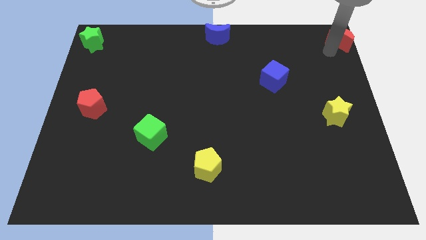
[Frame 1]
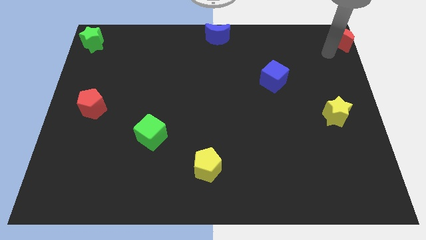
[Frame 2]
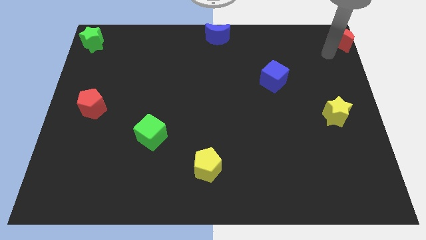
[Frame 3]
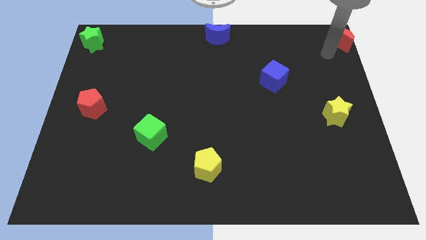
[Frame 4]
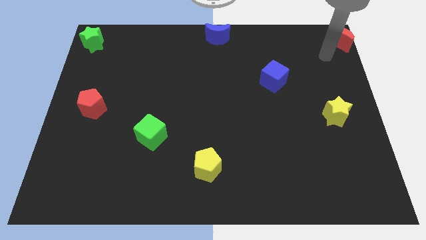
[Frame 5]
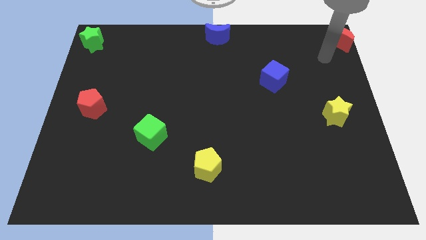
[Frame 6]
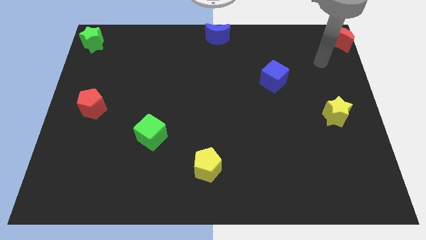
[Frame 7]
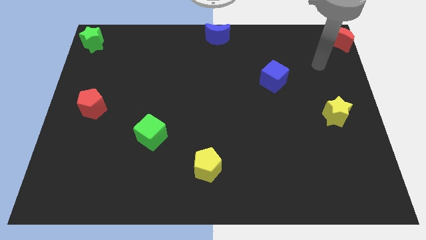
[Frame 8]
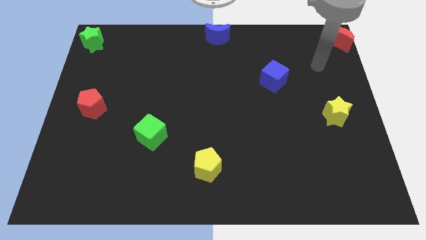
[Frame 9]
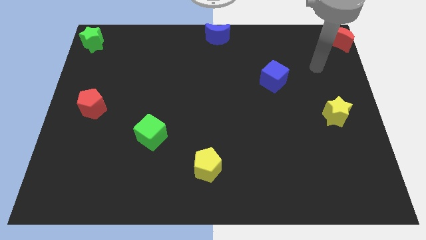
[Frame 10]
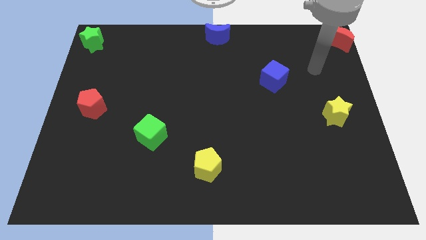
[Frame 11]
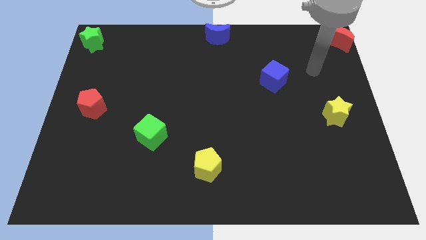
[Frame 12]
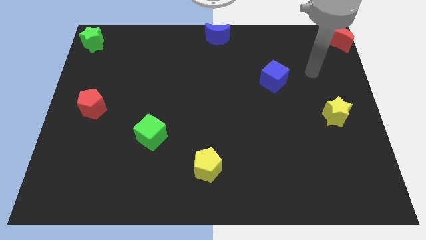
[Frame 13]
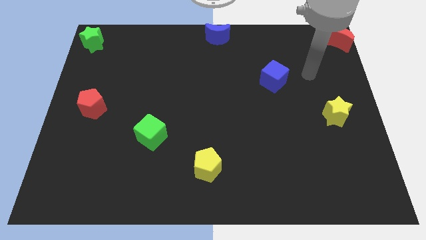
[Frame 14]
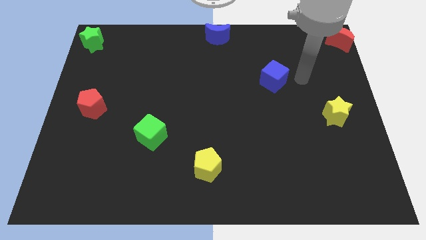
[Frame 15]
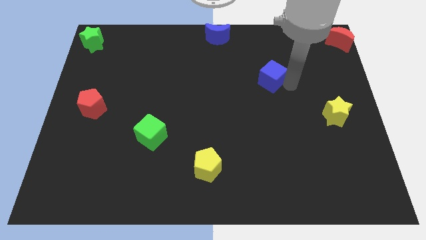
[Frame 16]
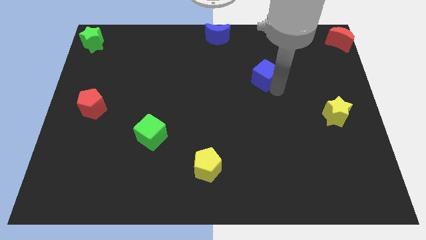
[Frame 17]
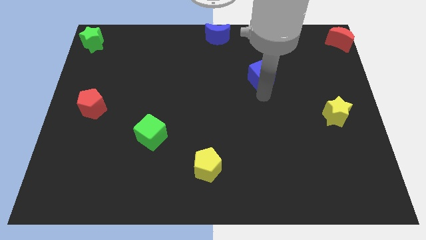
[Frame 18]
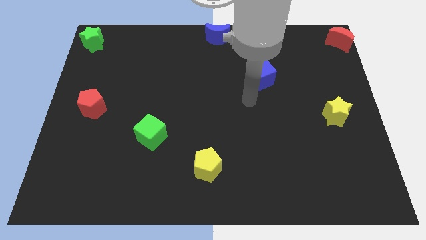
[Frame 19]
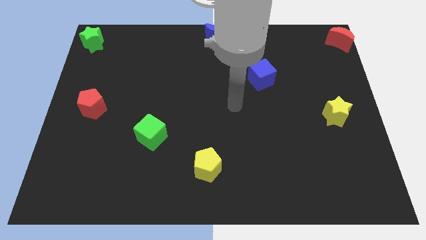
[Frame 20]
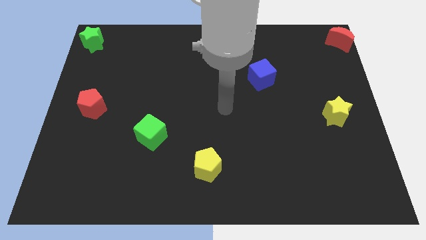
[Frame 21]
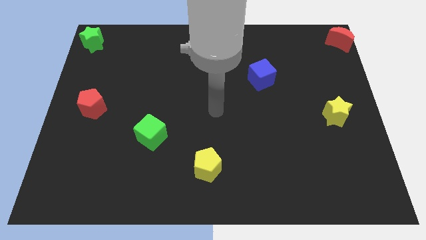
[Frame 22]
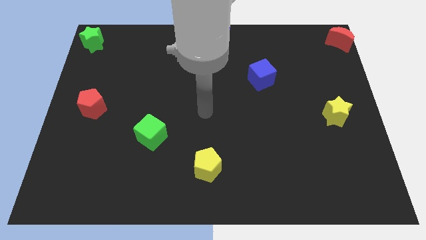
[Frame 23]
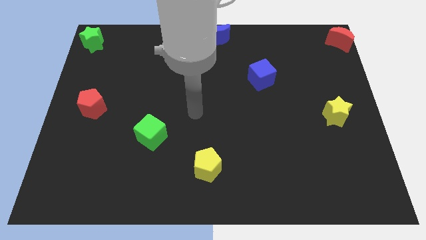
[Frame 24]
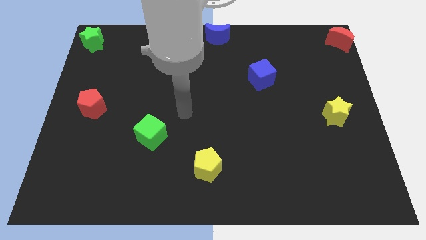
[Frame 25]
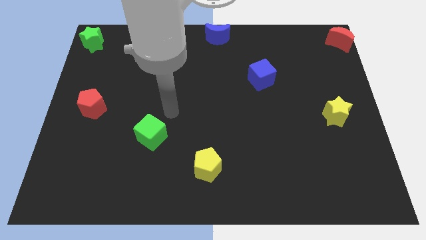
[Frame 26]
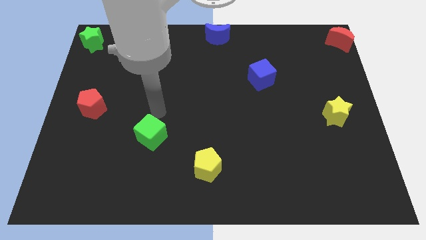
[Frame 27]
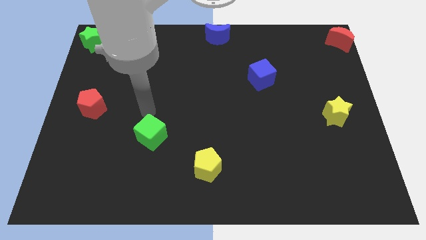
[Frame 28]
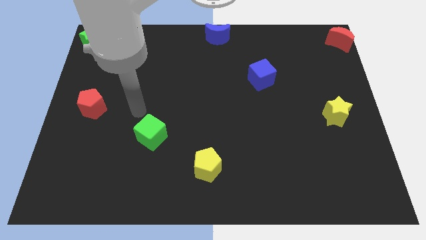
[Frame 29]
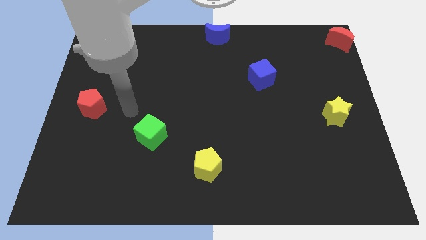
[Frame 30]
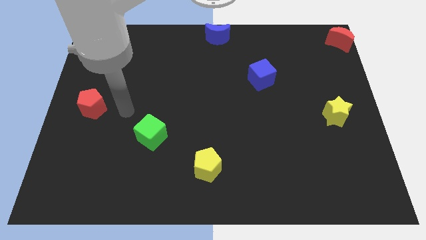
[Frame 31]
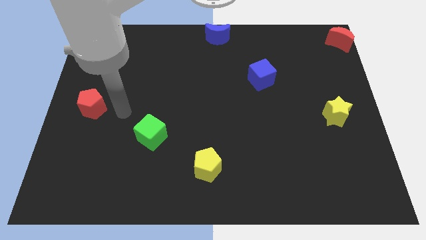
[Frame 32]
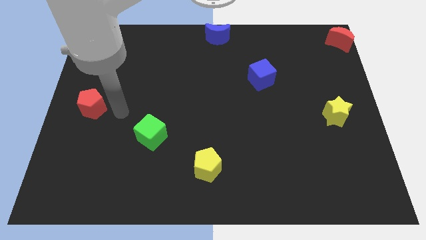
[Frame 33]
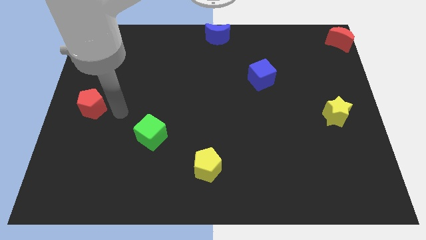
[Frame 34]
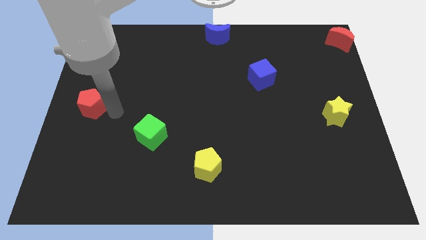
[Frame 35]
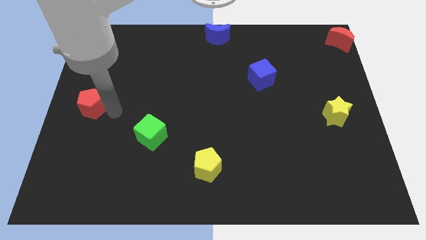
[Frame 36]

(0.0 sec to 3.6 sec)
move the arm away from the red moon

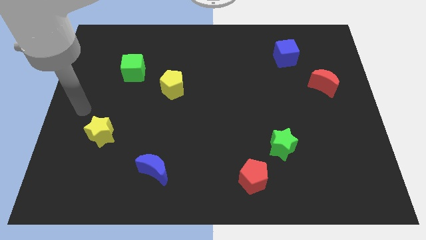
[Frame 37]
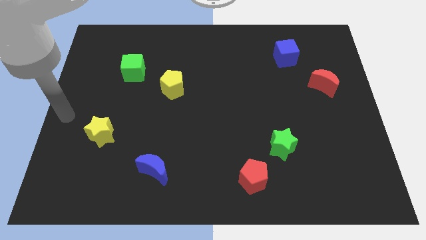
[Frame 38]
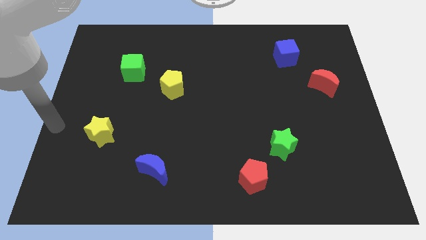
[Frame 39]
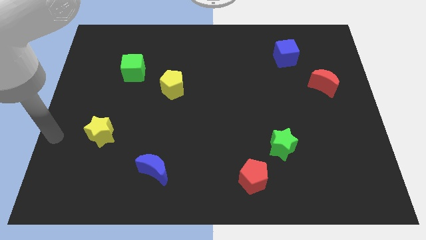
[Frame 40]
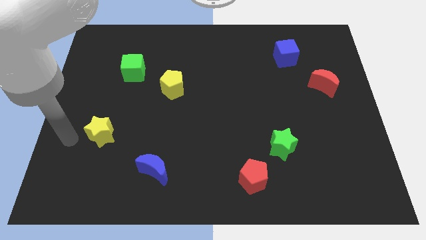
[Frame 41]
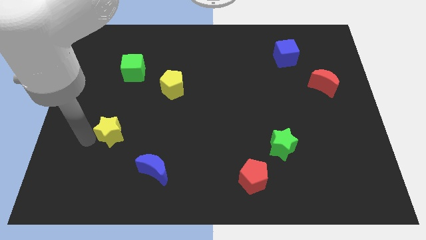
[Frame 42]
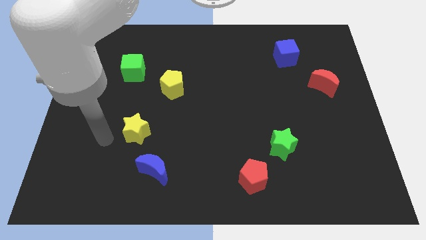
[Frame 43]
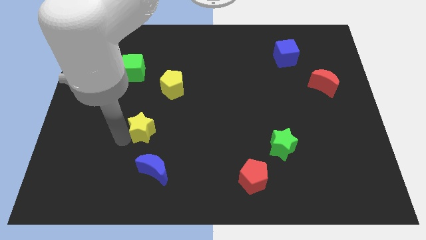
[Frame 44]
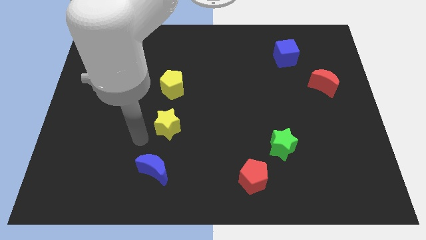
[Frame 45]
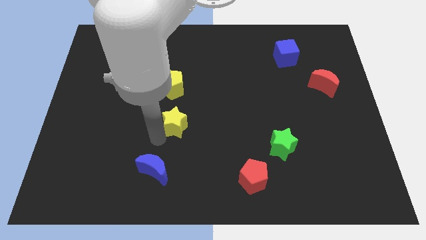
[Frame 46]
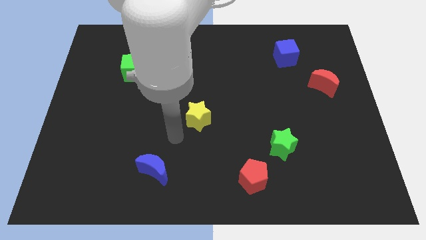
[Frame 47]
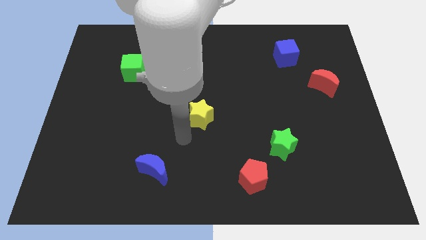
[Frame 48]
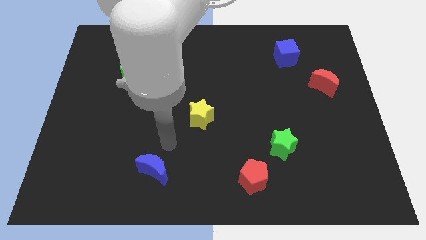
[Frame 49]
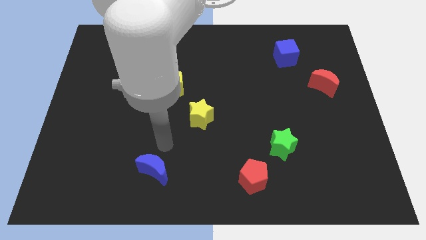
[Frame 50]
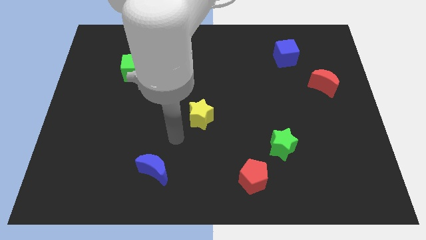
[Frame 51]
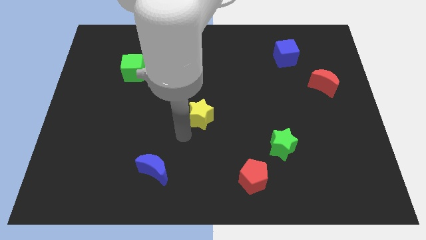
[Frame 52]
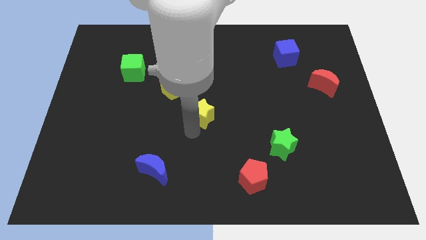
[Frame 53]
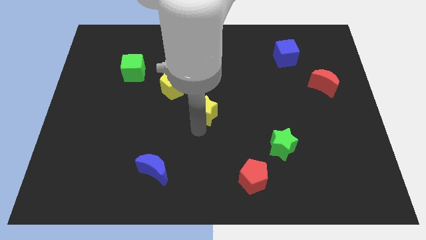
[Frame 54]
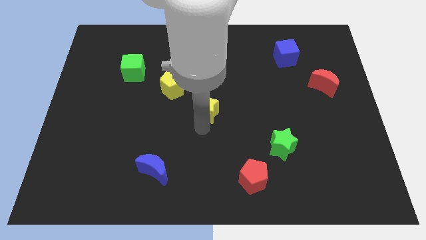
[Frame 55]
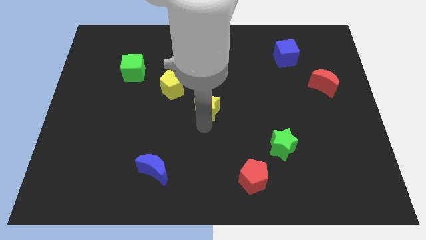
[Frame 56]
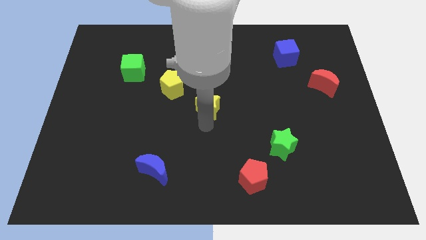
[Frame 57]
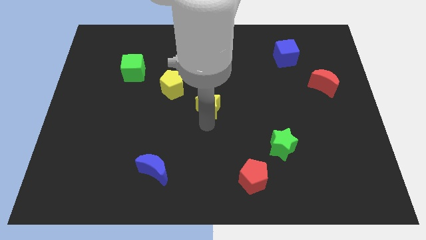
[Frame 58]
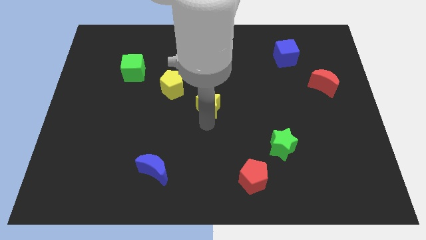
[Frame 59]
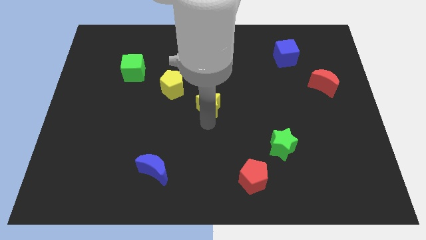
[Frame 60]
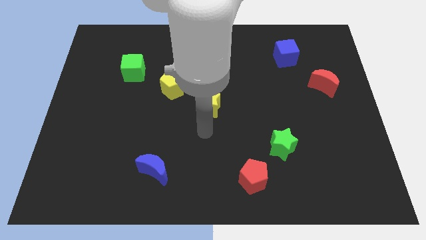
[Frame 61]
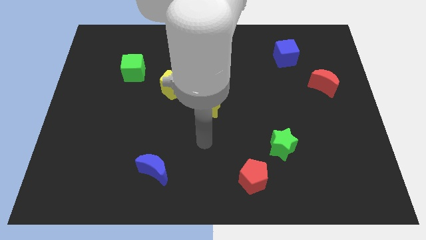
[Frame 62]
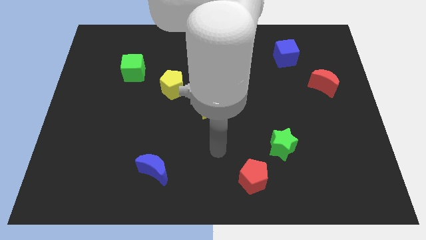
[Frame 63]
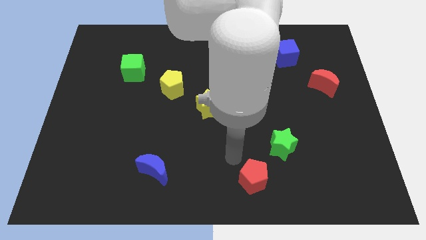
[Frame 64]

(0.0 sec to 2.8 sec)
place the yellow star to the bottom right of the yellow pentagon

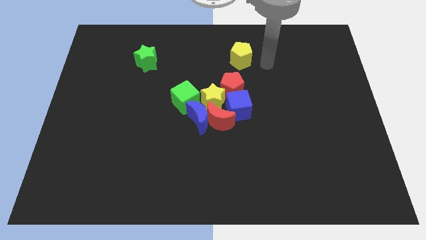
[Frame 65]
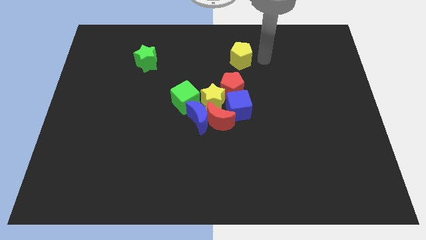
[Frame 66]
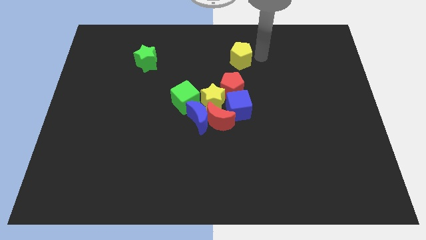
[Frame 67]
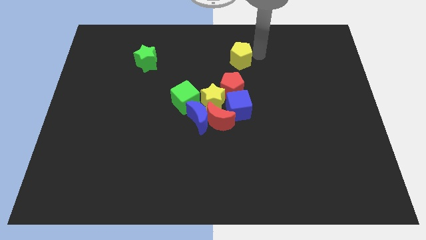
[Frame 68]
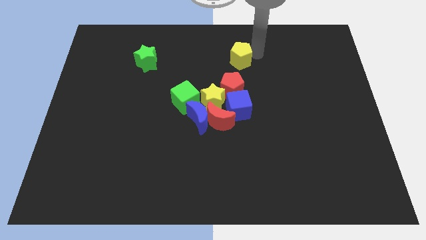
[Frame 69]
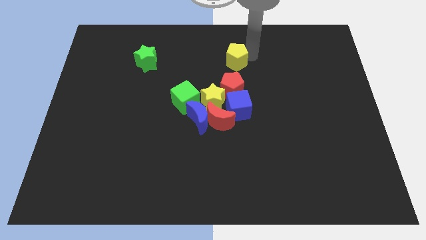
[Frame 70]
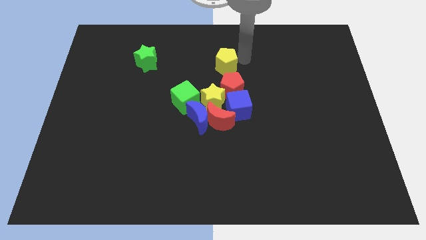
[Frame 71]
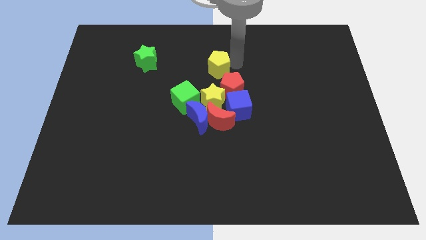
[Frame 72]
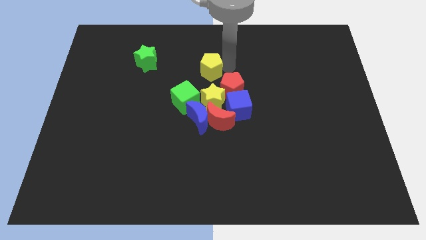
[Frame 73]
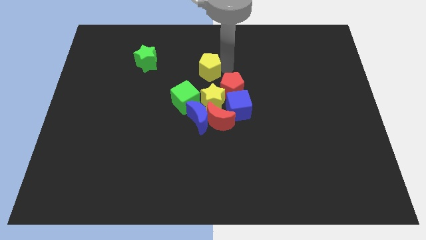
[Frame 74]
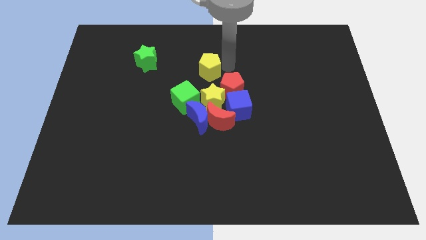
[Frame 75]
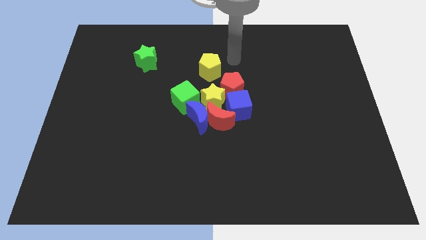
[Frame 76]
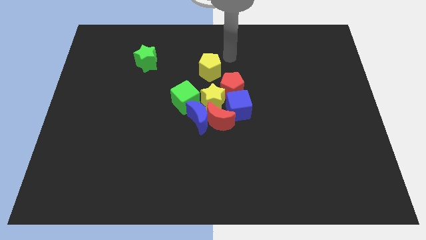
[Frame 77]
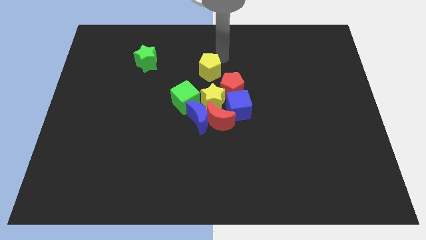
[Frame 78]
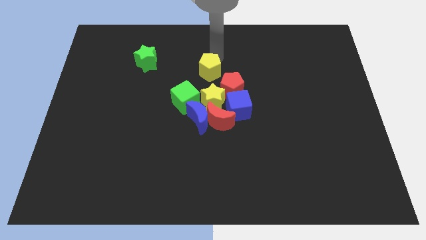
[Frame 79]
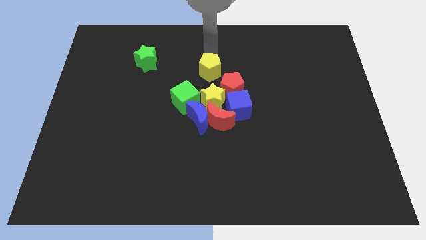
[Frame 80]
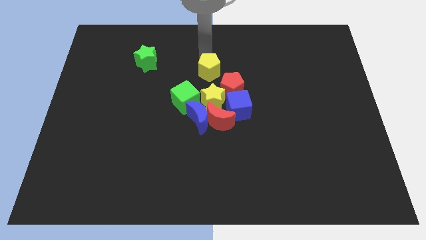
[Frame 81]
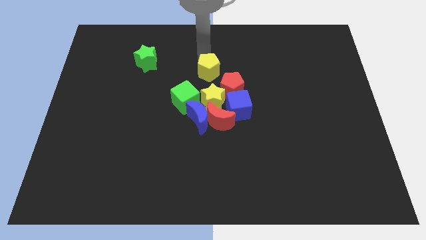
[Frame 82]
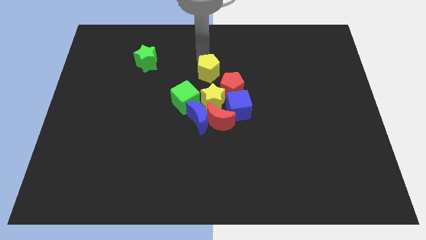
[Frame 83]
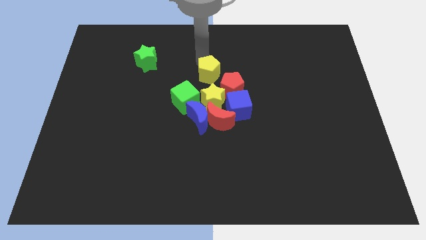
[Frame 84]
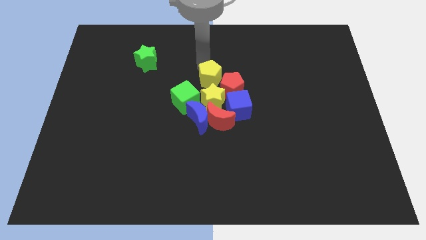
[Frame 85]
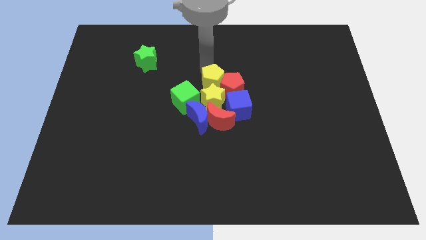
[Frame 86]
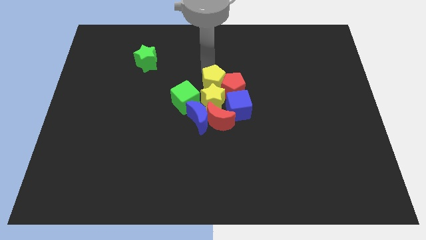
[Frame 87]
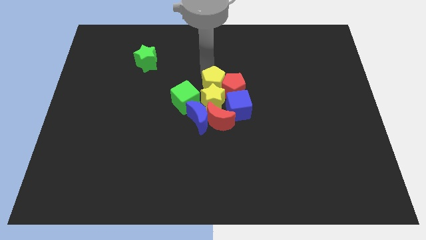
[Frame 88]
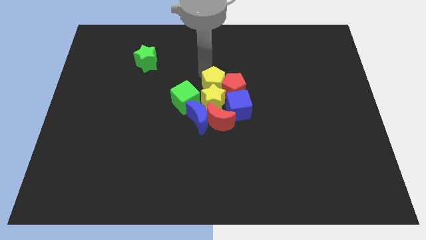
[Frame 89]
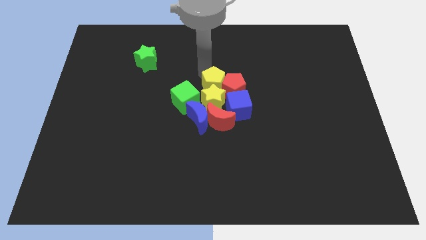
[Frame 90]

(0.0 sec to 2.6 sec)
move the yellow pentagon to the top of yellow star
